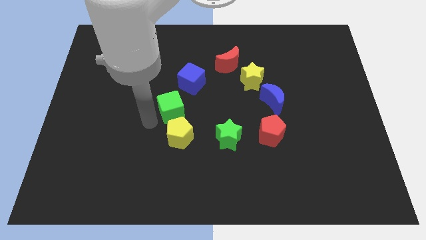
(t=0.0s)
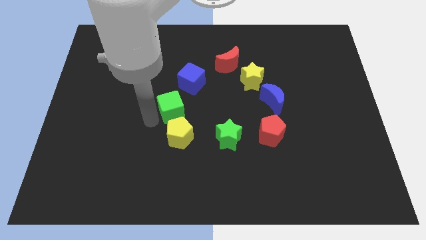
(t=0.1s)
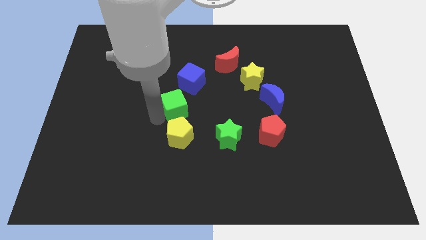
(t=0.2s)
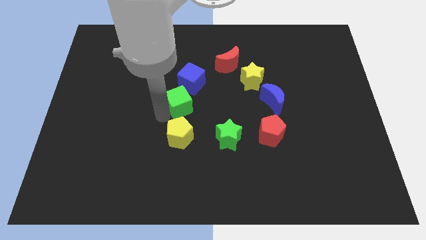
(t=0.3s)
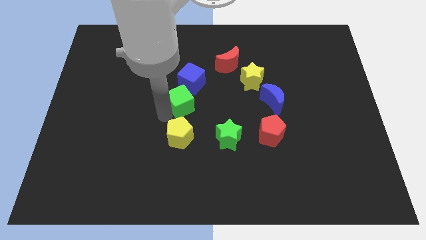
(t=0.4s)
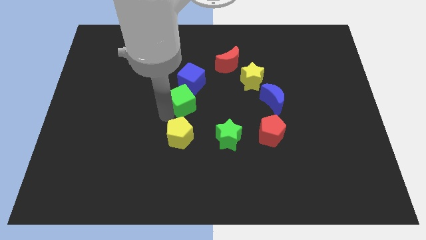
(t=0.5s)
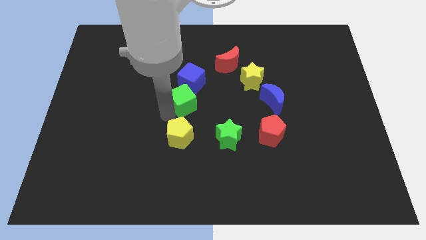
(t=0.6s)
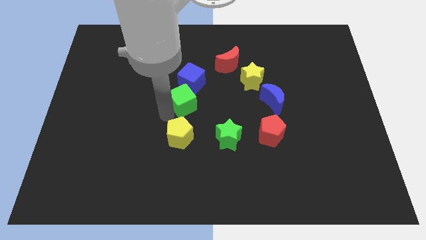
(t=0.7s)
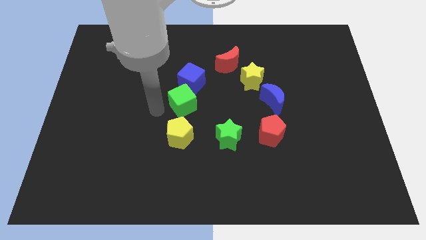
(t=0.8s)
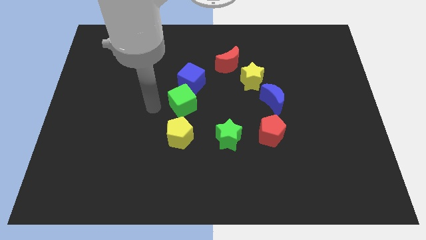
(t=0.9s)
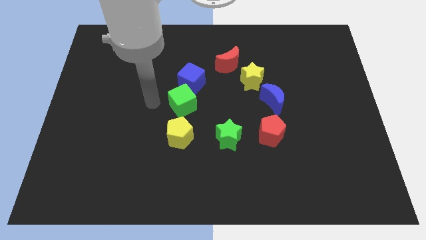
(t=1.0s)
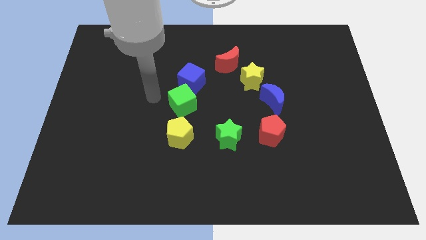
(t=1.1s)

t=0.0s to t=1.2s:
push the green square close to blue square

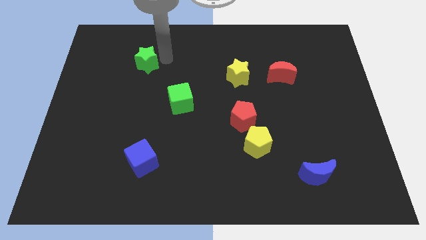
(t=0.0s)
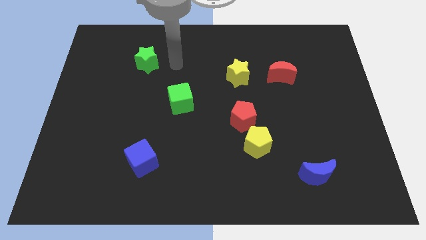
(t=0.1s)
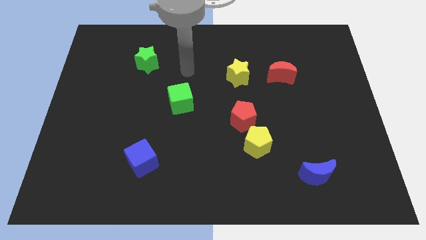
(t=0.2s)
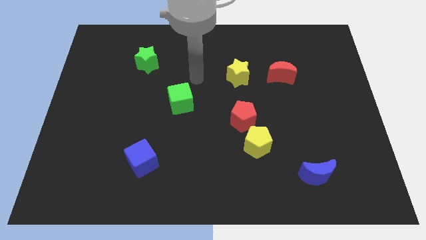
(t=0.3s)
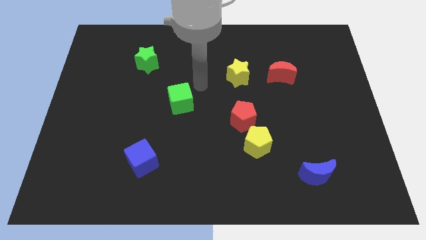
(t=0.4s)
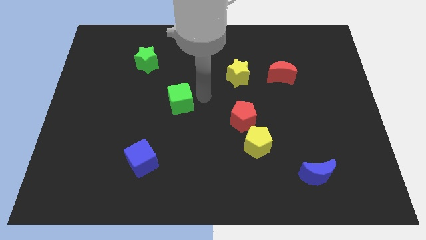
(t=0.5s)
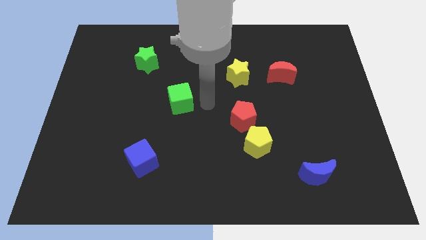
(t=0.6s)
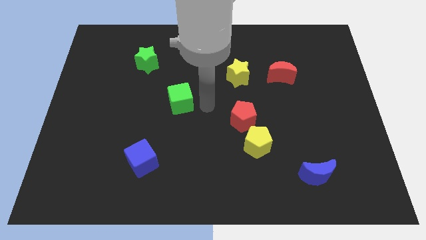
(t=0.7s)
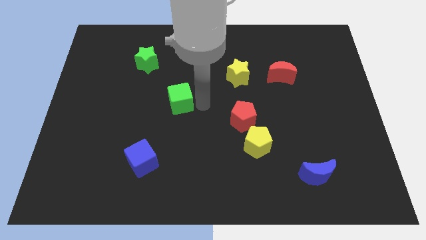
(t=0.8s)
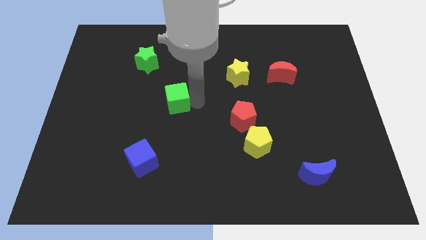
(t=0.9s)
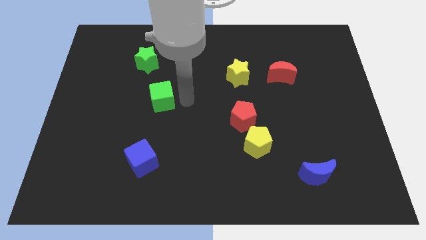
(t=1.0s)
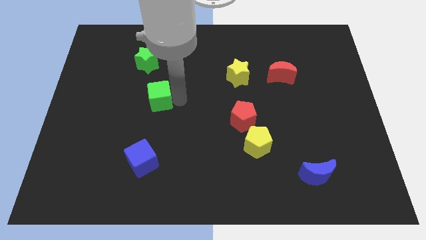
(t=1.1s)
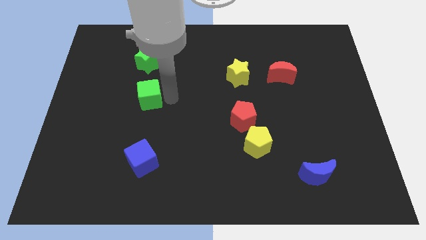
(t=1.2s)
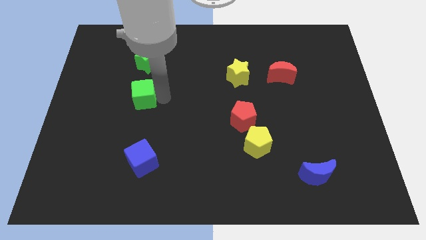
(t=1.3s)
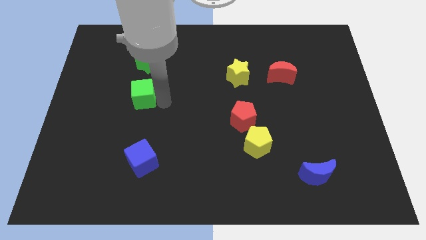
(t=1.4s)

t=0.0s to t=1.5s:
place green cube to the bottom of green star

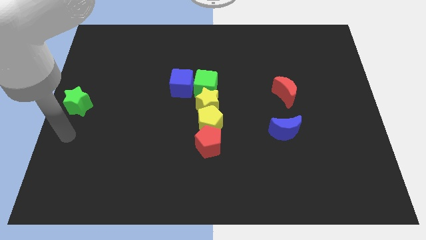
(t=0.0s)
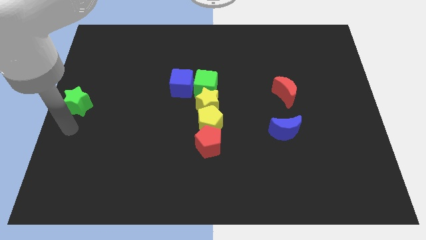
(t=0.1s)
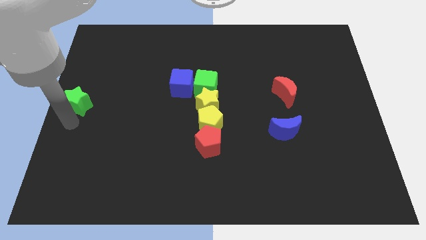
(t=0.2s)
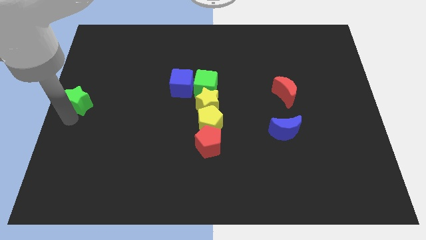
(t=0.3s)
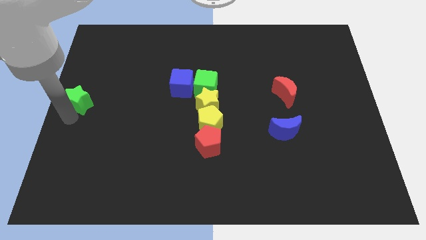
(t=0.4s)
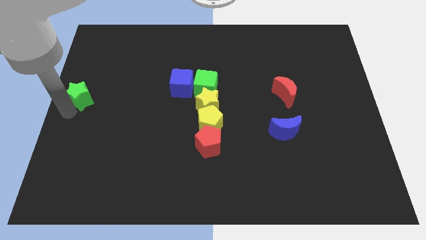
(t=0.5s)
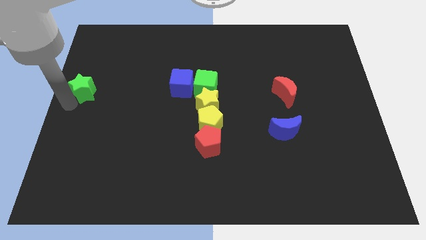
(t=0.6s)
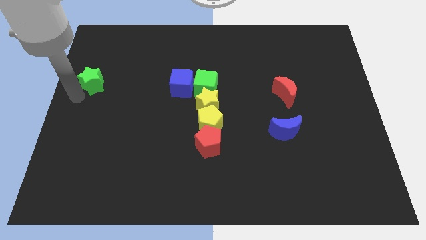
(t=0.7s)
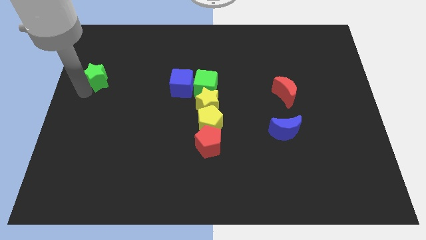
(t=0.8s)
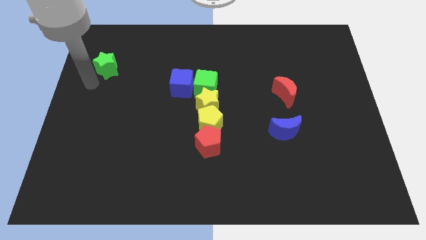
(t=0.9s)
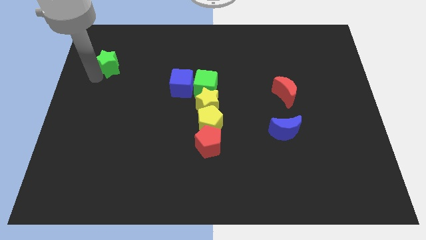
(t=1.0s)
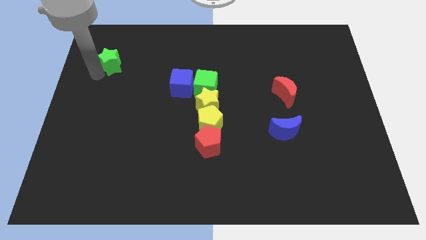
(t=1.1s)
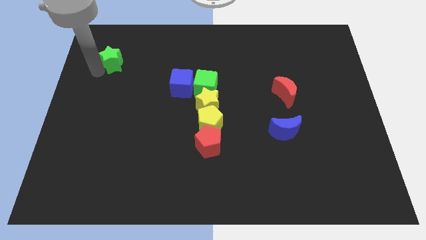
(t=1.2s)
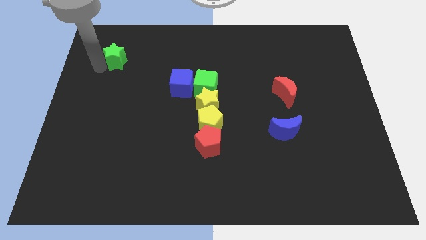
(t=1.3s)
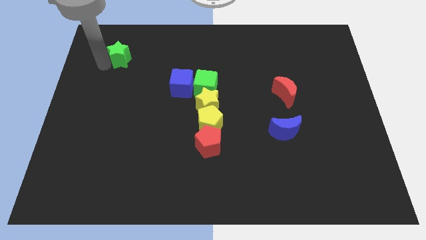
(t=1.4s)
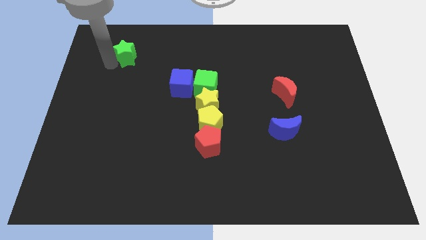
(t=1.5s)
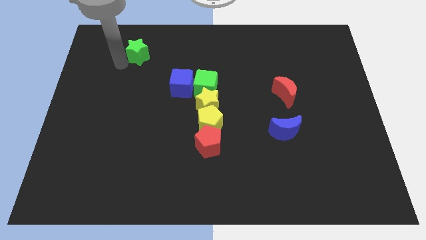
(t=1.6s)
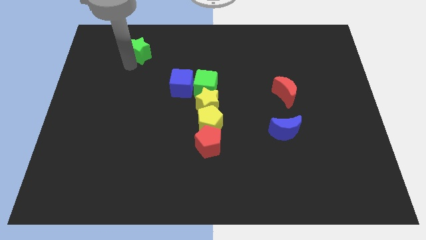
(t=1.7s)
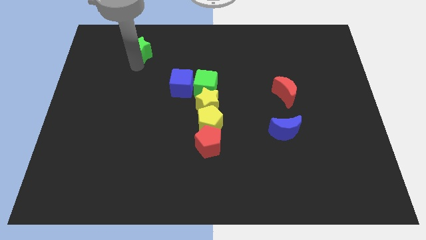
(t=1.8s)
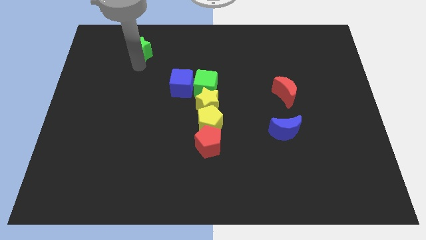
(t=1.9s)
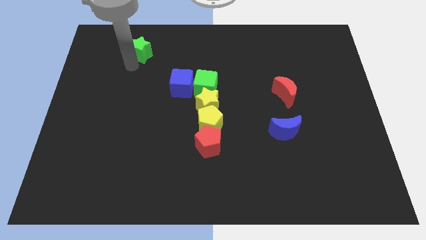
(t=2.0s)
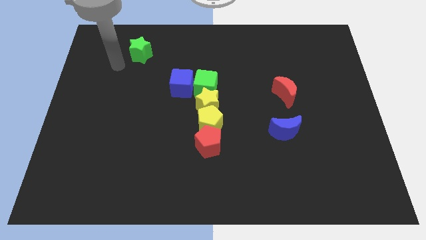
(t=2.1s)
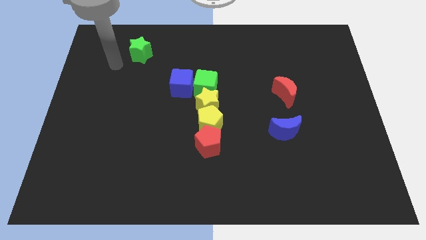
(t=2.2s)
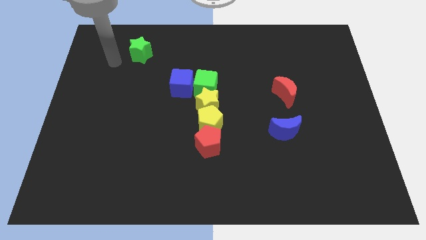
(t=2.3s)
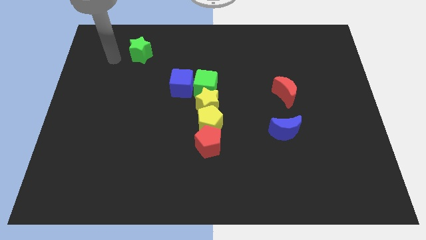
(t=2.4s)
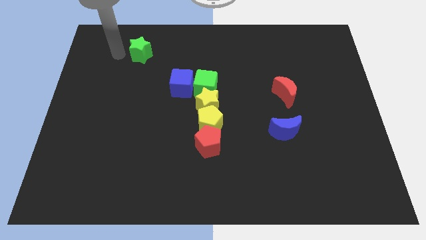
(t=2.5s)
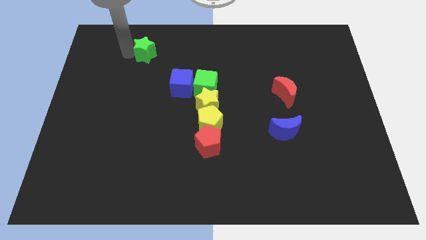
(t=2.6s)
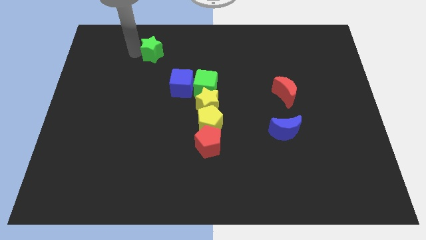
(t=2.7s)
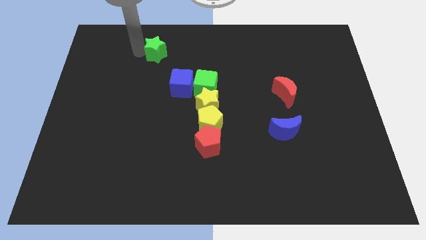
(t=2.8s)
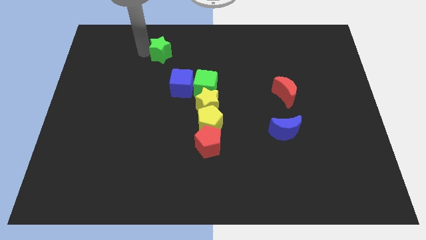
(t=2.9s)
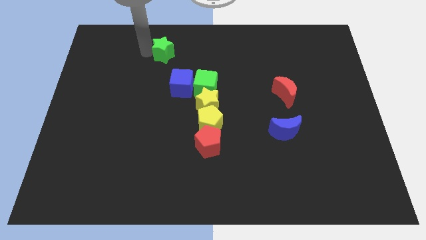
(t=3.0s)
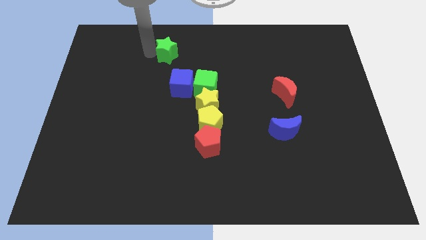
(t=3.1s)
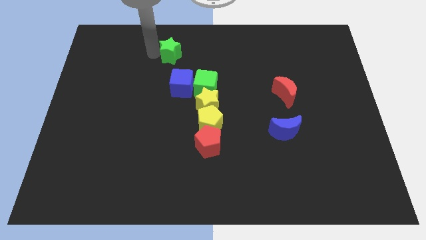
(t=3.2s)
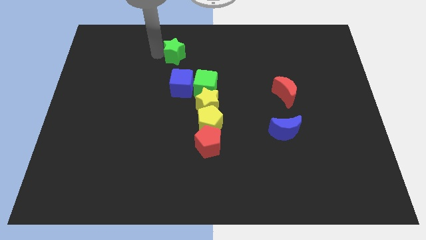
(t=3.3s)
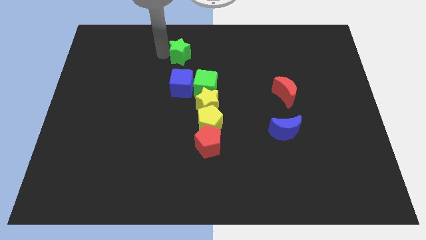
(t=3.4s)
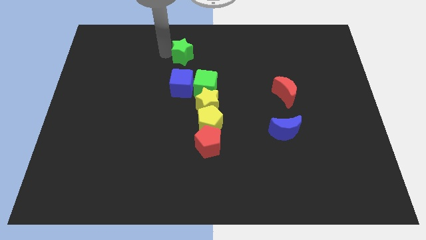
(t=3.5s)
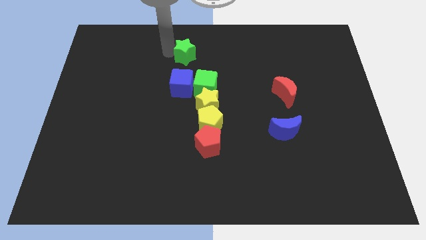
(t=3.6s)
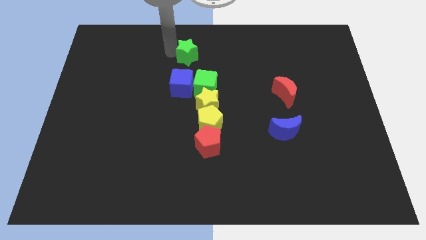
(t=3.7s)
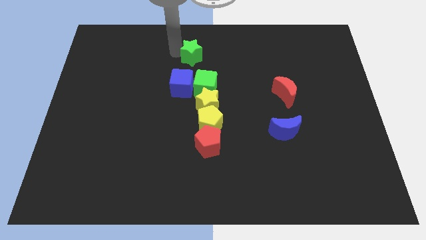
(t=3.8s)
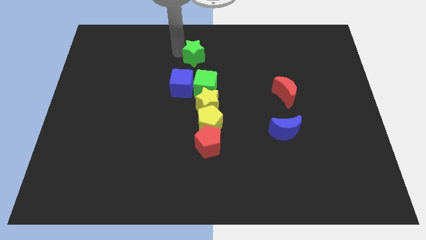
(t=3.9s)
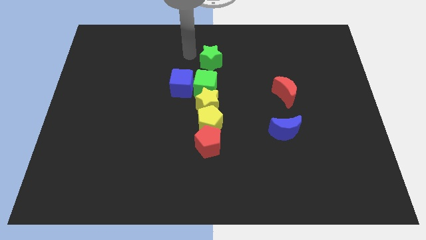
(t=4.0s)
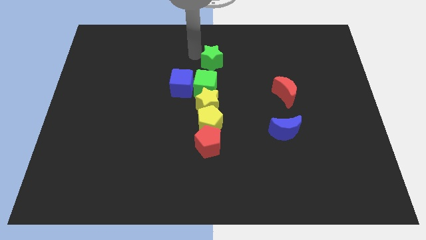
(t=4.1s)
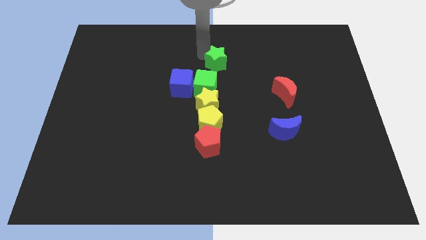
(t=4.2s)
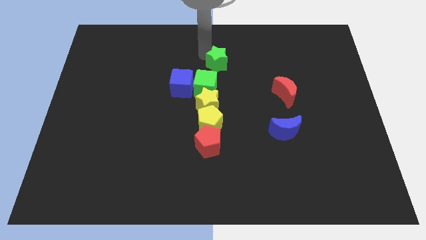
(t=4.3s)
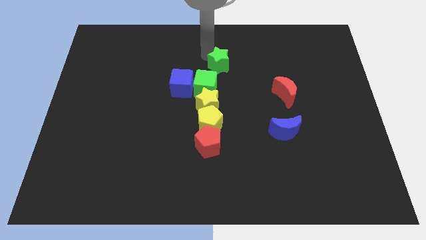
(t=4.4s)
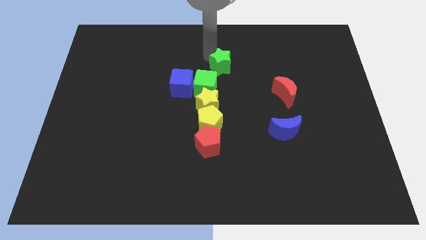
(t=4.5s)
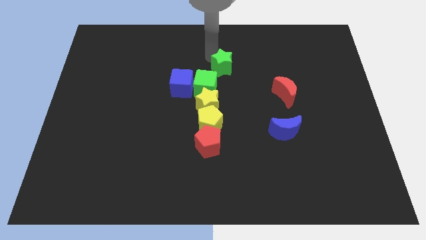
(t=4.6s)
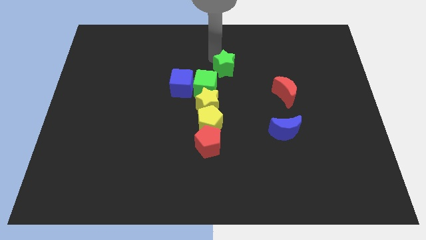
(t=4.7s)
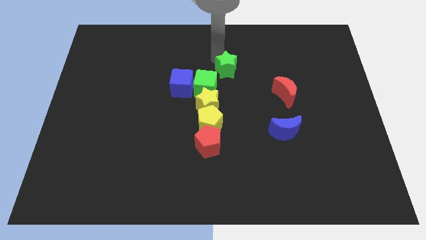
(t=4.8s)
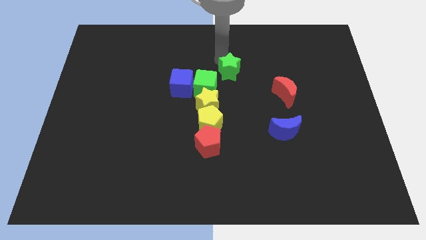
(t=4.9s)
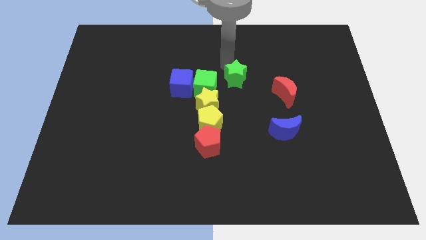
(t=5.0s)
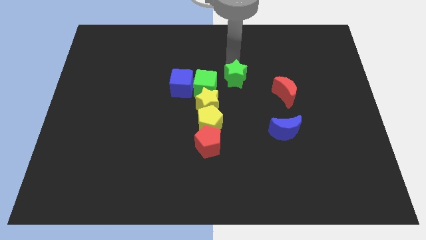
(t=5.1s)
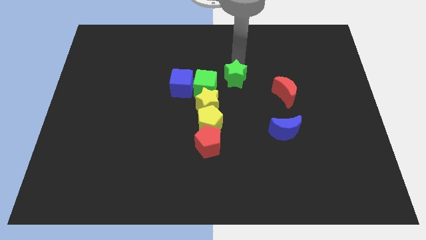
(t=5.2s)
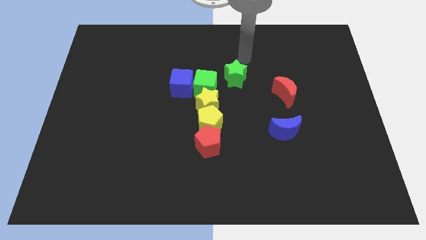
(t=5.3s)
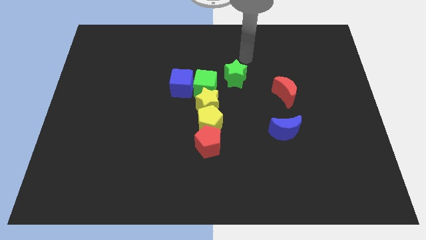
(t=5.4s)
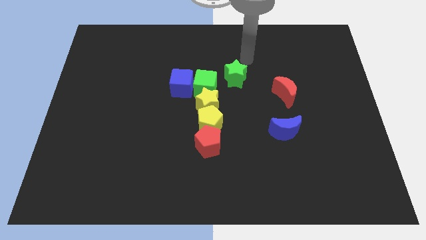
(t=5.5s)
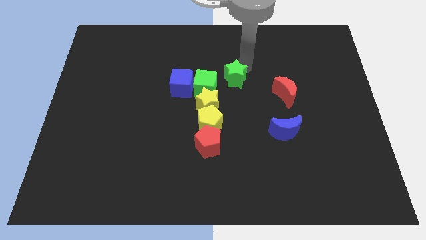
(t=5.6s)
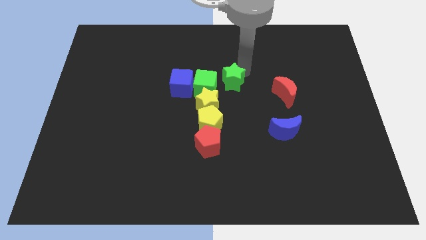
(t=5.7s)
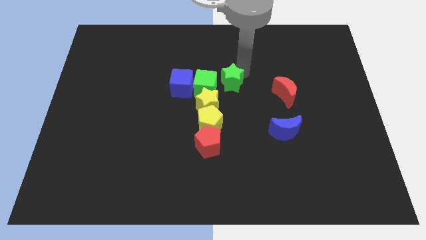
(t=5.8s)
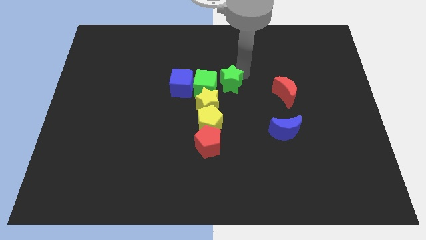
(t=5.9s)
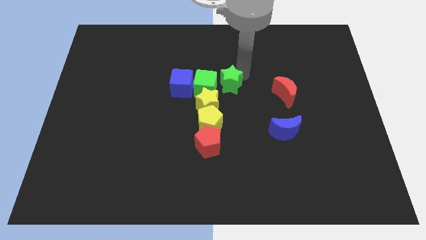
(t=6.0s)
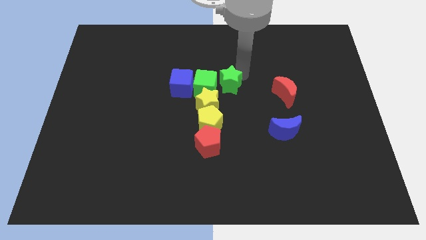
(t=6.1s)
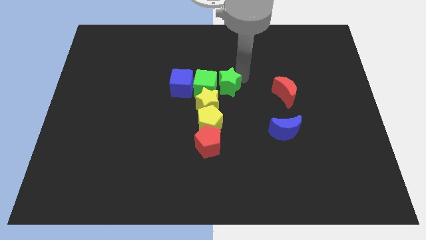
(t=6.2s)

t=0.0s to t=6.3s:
place green star beside green cube
